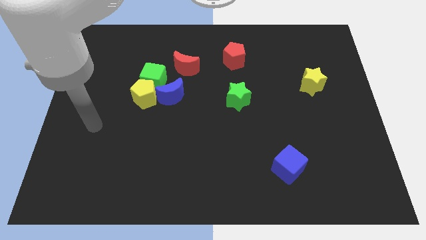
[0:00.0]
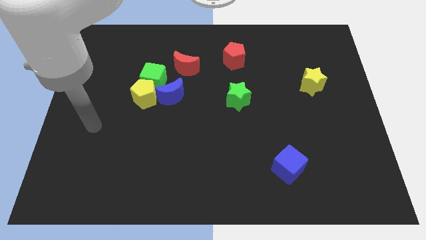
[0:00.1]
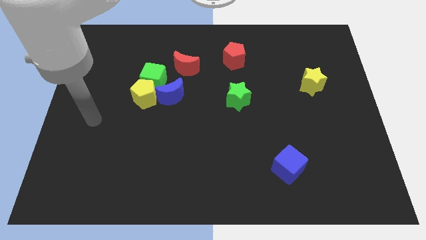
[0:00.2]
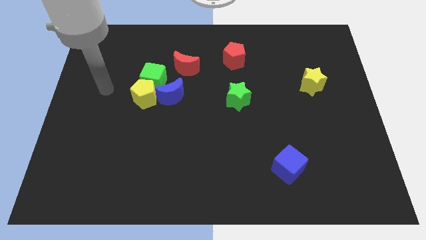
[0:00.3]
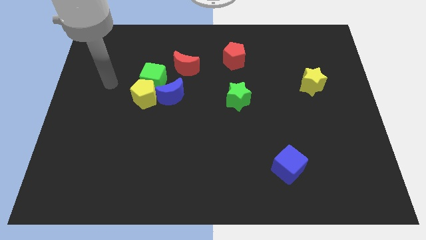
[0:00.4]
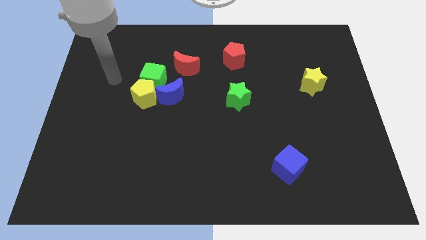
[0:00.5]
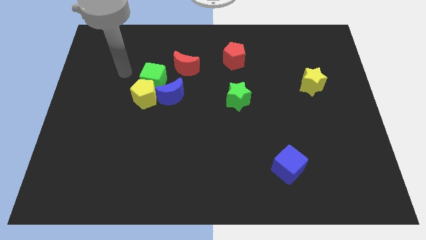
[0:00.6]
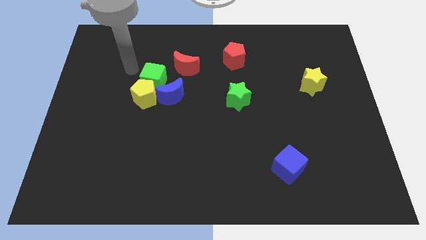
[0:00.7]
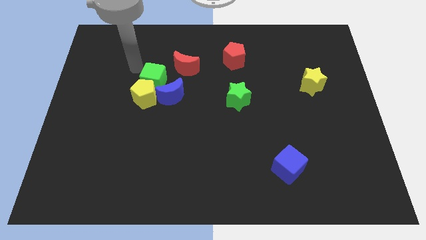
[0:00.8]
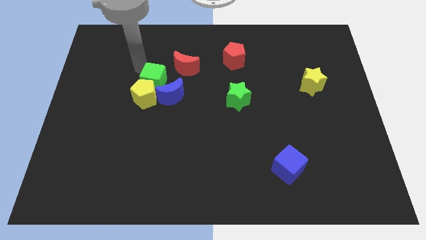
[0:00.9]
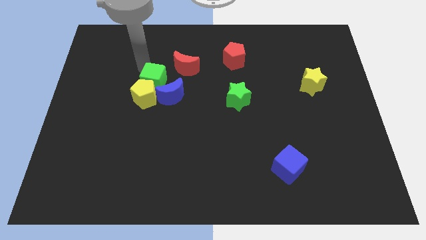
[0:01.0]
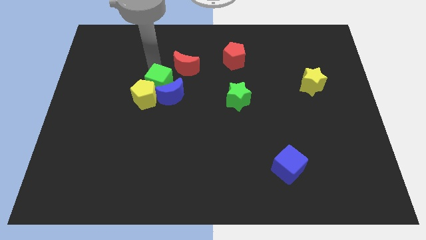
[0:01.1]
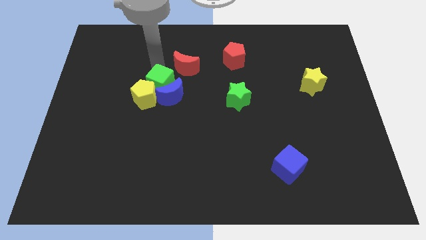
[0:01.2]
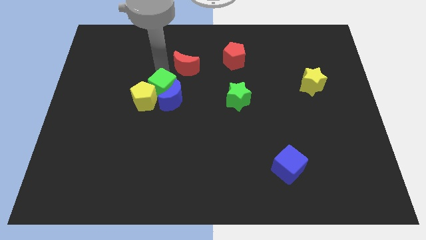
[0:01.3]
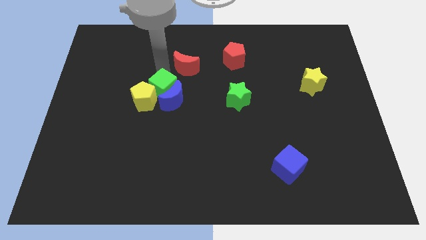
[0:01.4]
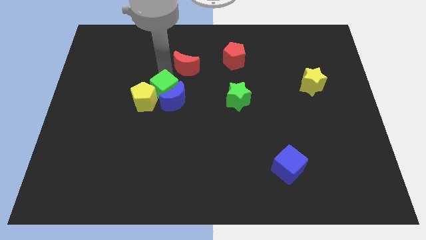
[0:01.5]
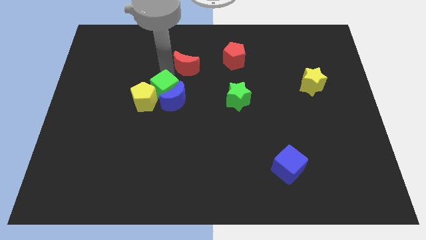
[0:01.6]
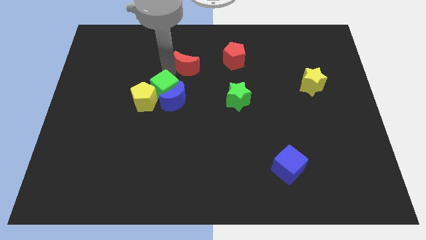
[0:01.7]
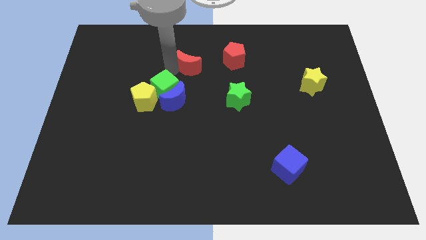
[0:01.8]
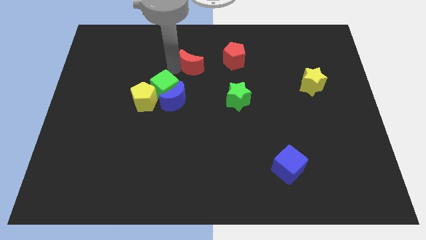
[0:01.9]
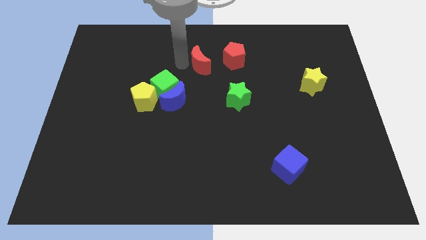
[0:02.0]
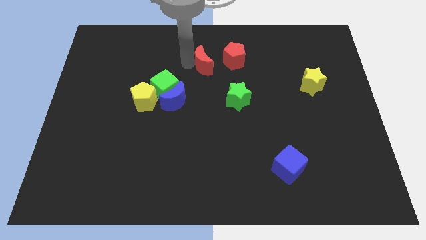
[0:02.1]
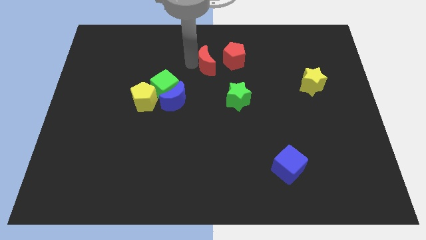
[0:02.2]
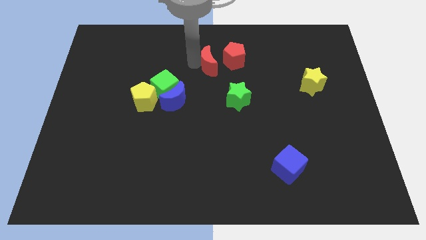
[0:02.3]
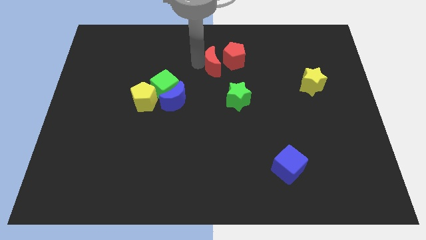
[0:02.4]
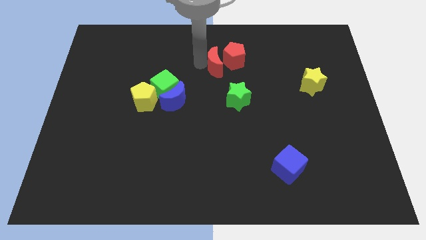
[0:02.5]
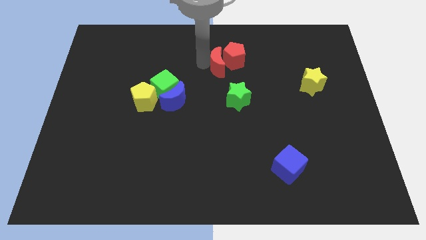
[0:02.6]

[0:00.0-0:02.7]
put the red moon towards the red pentagon

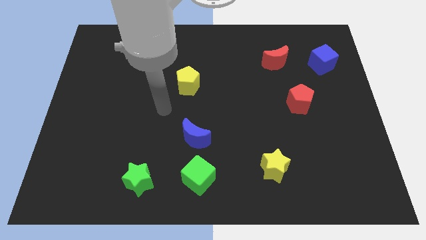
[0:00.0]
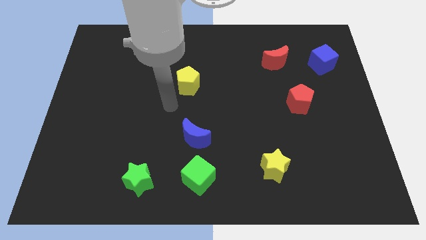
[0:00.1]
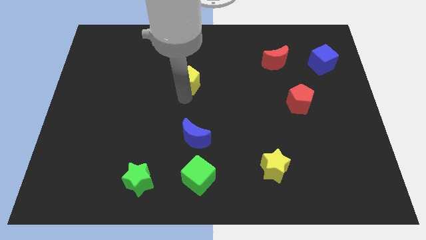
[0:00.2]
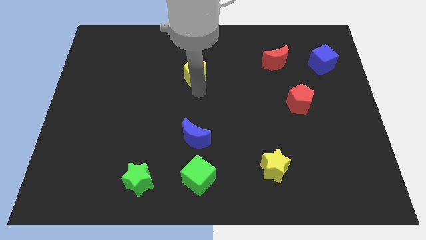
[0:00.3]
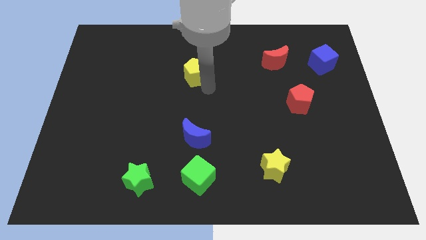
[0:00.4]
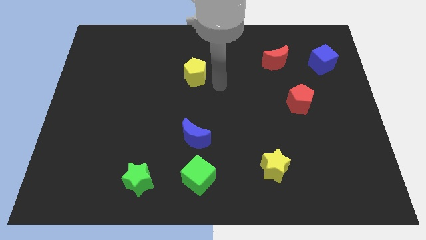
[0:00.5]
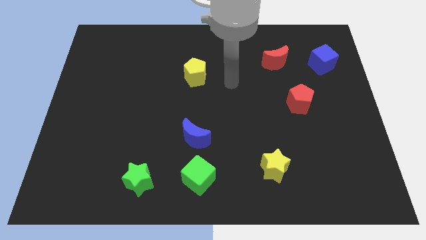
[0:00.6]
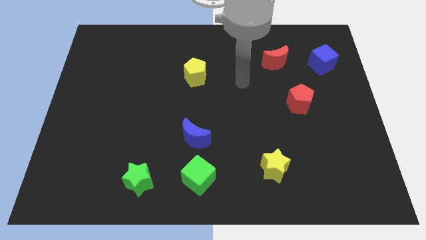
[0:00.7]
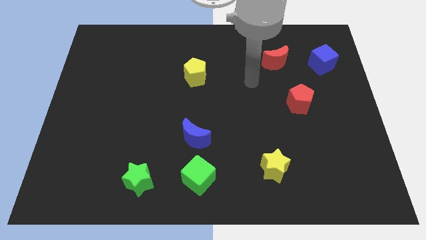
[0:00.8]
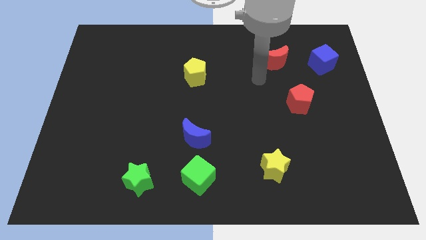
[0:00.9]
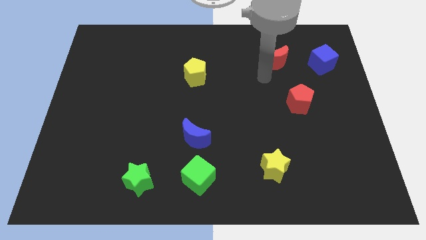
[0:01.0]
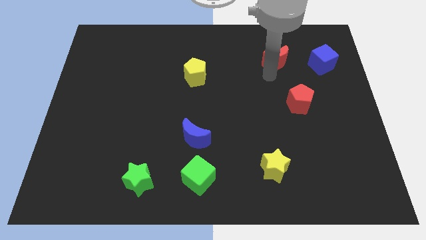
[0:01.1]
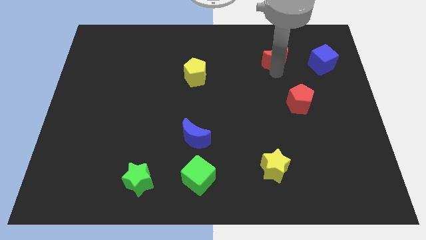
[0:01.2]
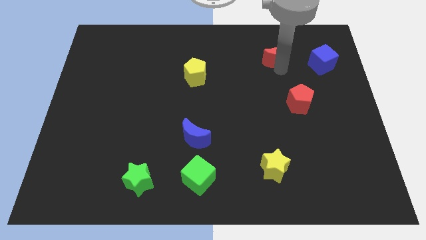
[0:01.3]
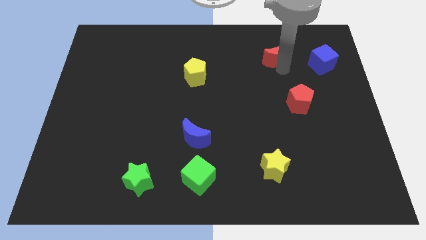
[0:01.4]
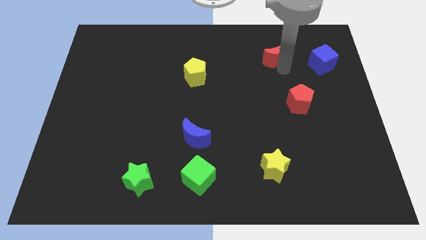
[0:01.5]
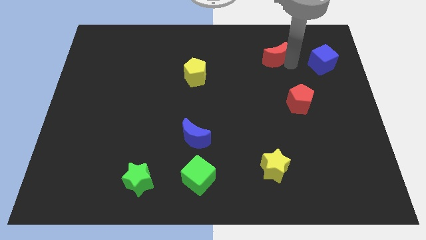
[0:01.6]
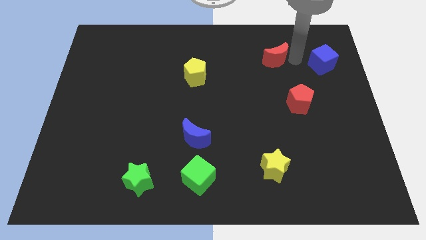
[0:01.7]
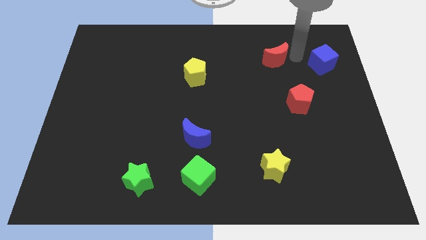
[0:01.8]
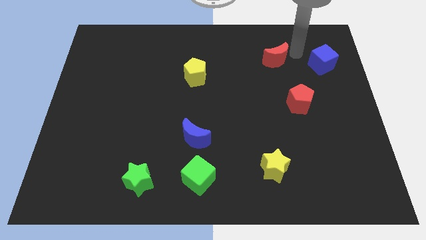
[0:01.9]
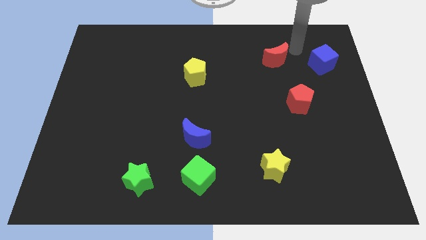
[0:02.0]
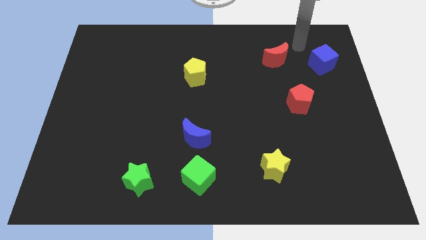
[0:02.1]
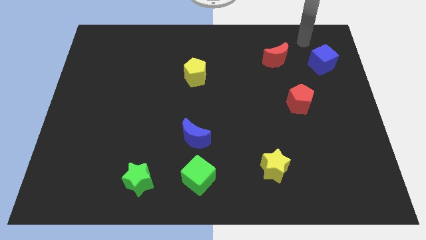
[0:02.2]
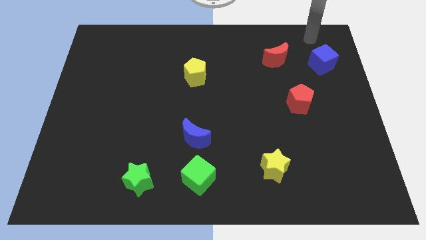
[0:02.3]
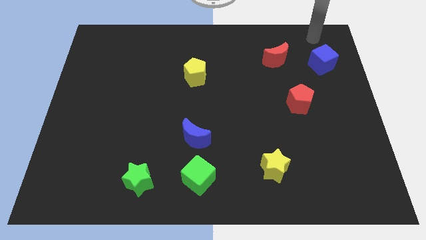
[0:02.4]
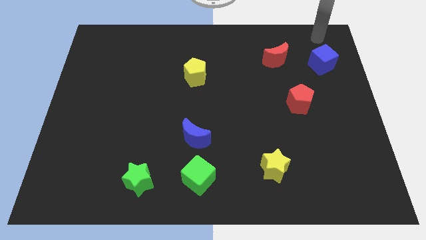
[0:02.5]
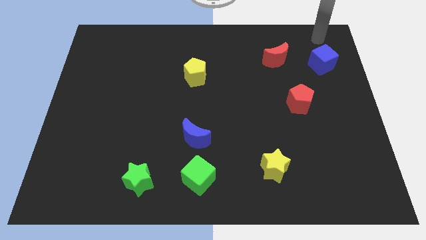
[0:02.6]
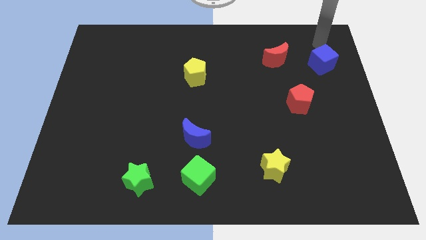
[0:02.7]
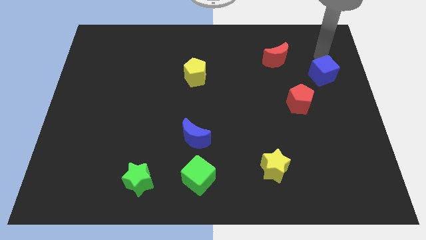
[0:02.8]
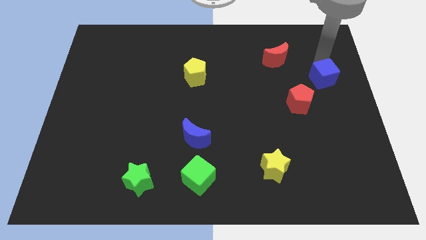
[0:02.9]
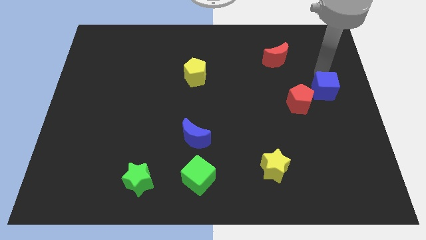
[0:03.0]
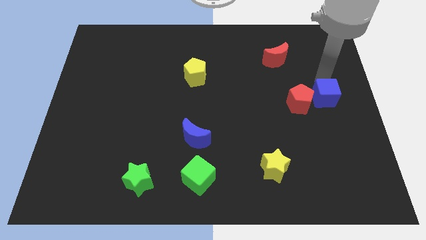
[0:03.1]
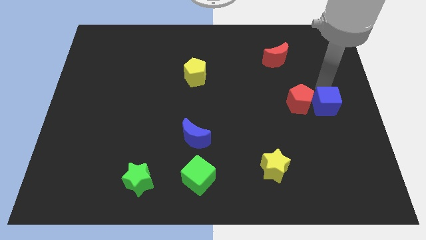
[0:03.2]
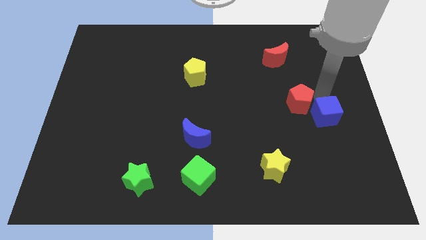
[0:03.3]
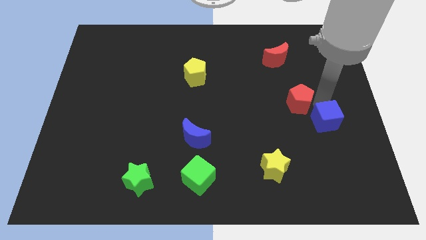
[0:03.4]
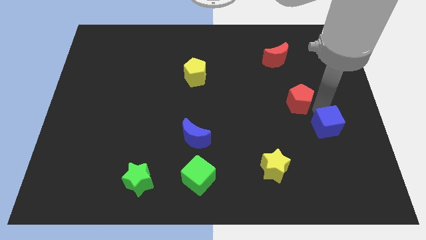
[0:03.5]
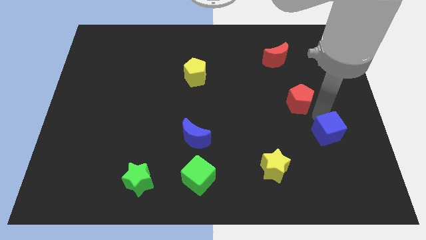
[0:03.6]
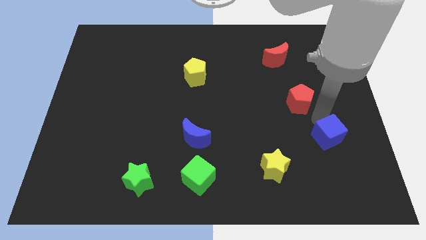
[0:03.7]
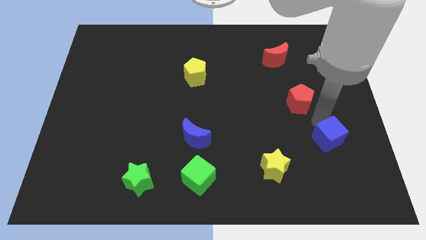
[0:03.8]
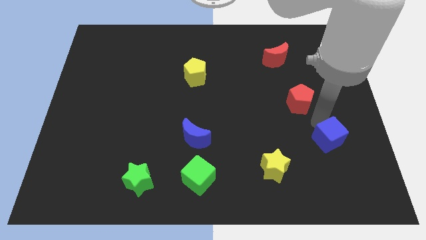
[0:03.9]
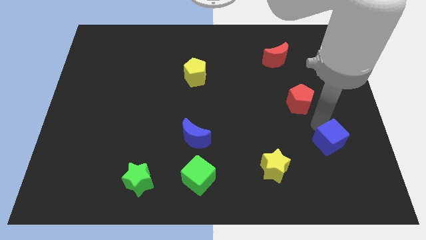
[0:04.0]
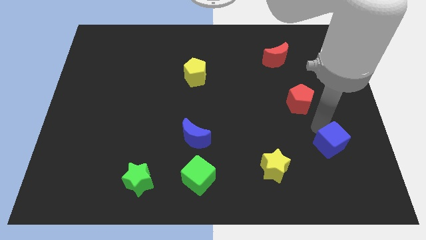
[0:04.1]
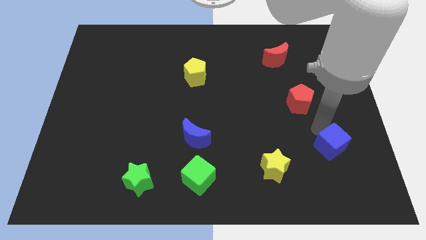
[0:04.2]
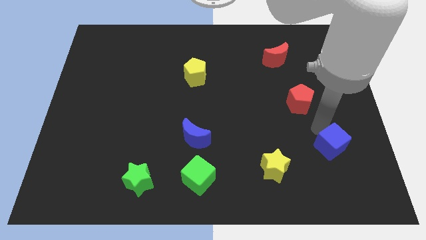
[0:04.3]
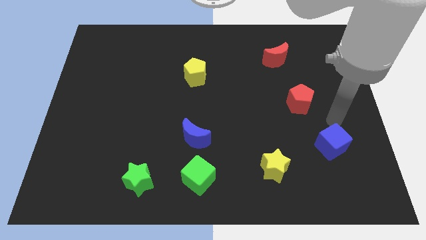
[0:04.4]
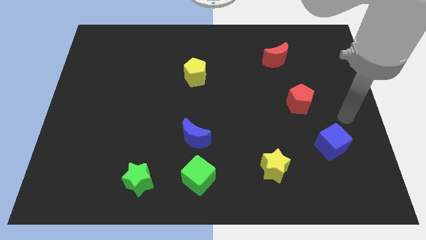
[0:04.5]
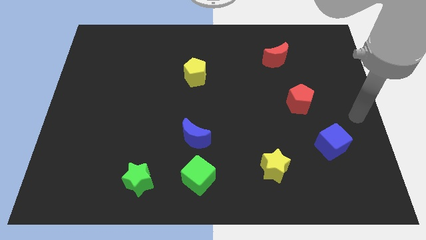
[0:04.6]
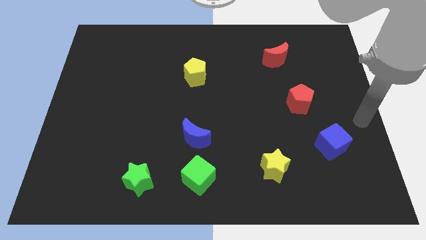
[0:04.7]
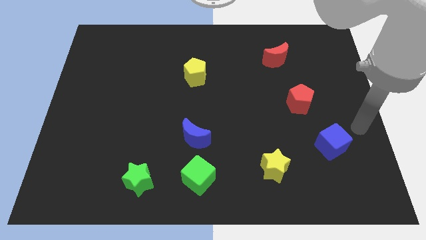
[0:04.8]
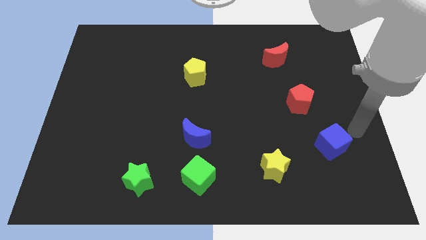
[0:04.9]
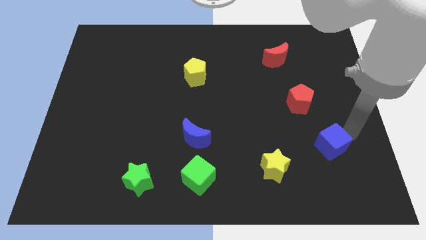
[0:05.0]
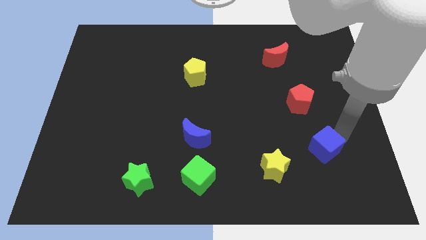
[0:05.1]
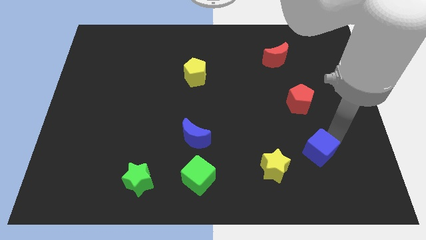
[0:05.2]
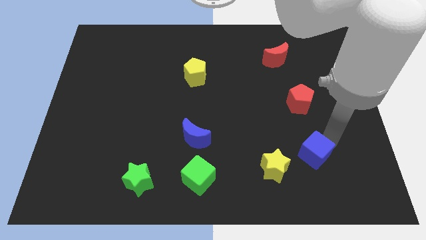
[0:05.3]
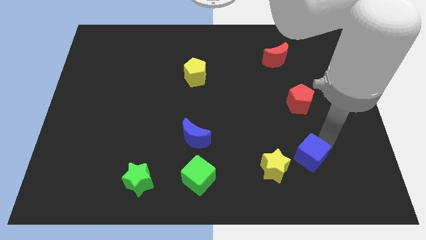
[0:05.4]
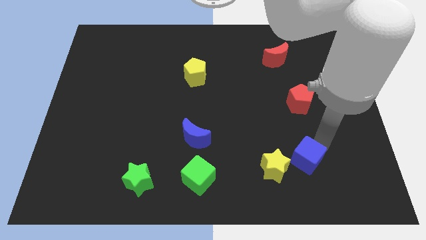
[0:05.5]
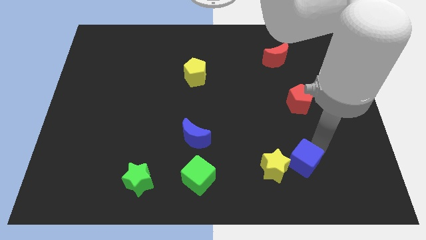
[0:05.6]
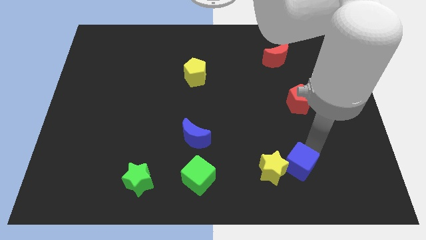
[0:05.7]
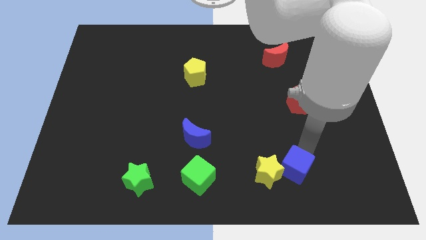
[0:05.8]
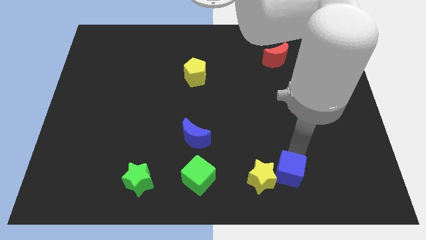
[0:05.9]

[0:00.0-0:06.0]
move the blue cube close to the yellow star

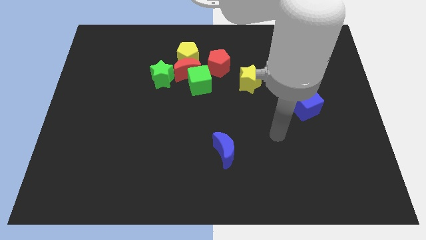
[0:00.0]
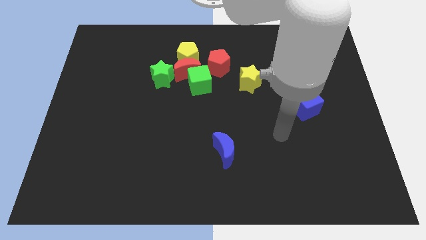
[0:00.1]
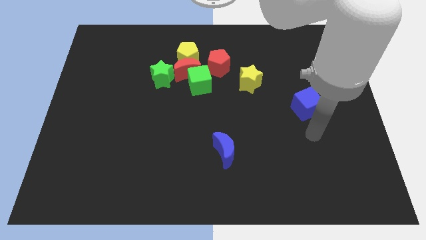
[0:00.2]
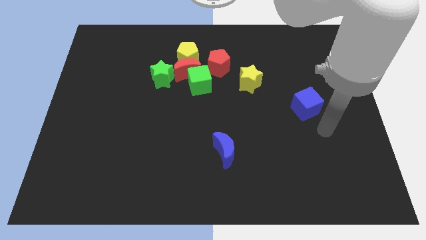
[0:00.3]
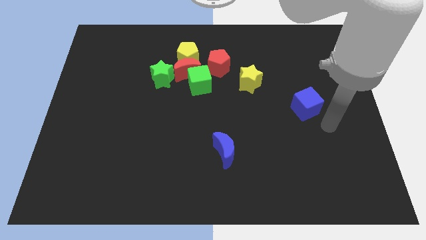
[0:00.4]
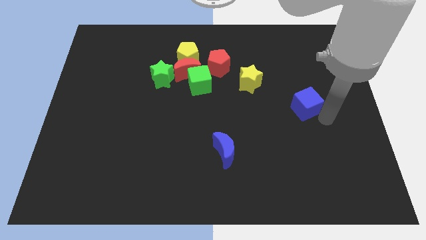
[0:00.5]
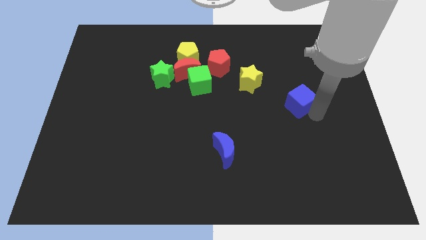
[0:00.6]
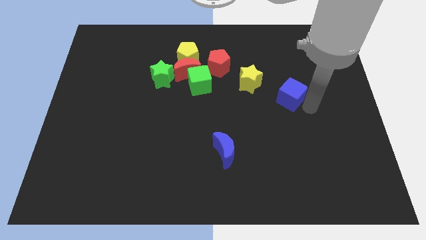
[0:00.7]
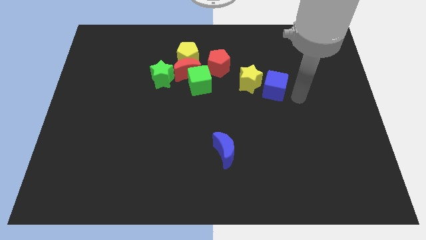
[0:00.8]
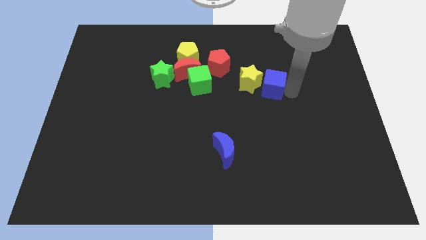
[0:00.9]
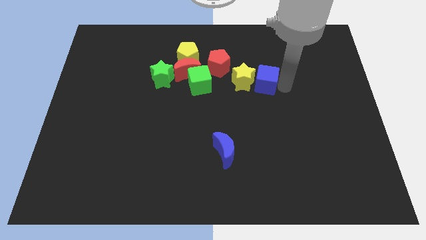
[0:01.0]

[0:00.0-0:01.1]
slide the blue cube to the yellow star
